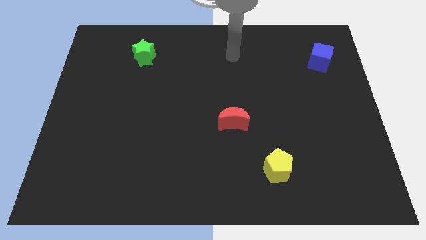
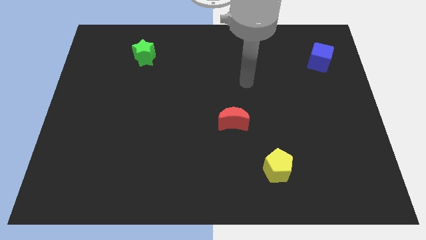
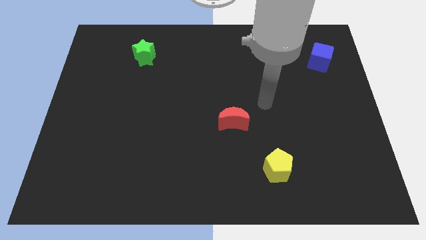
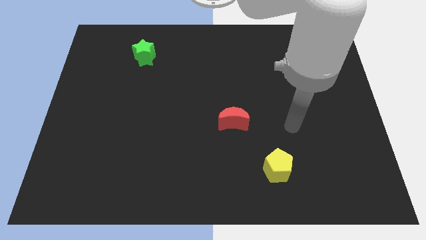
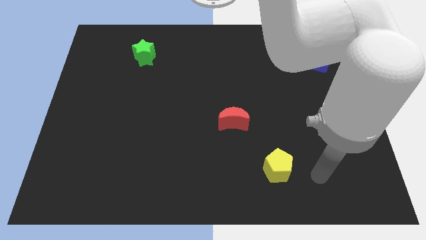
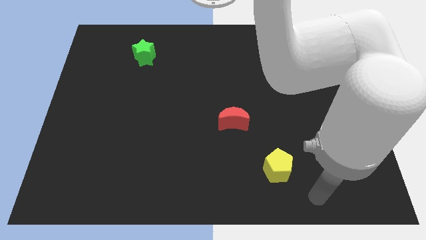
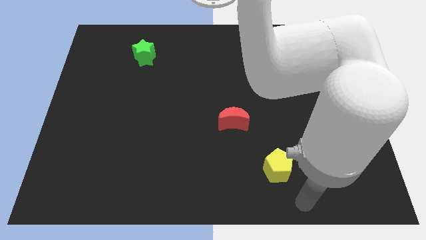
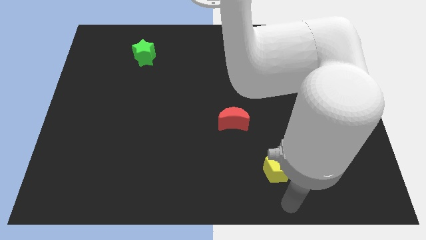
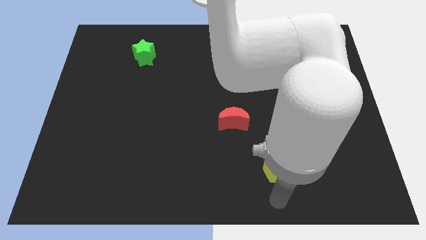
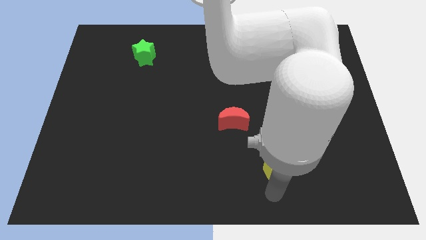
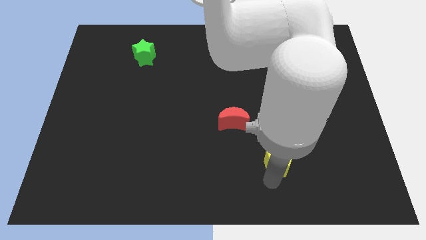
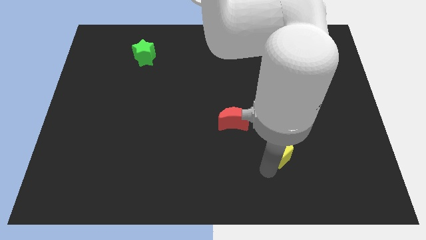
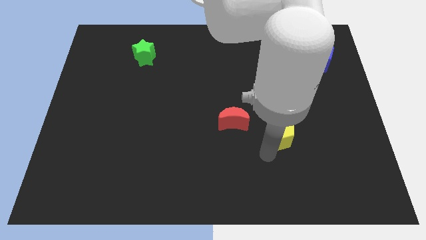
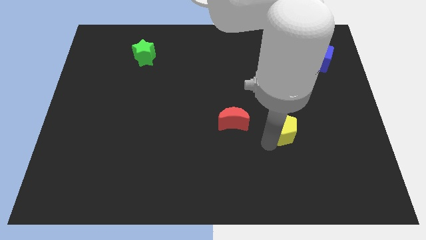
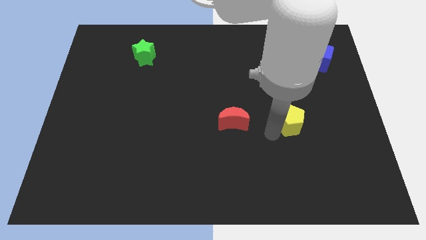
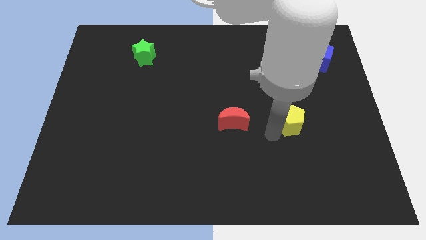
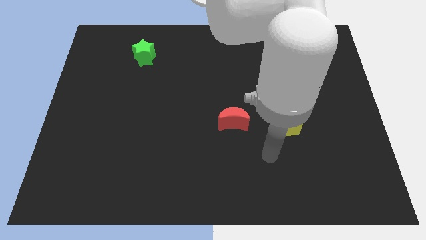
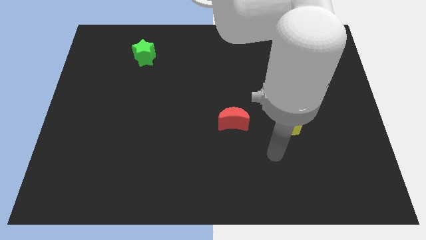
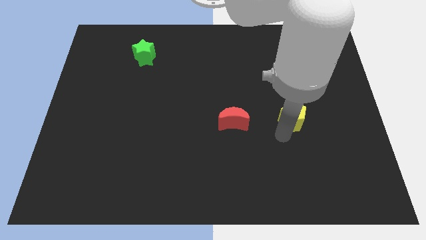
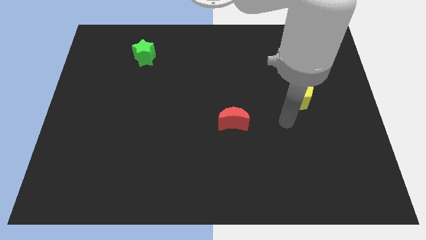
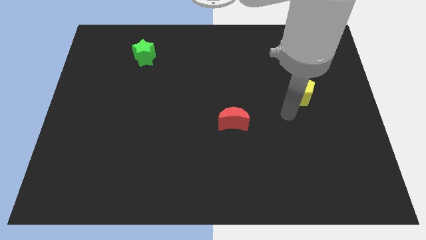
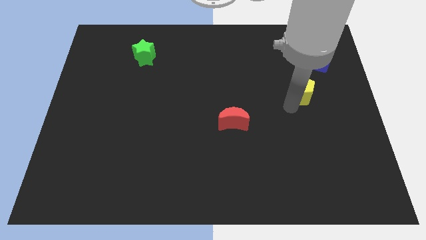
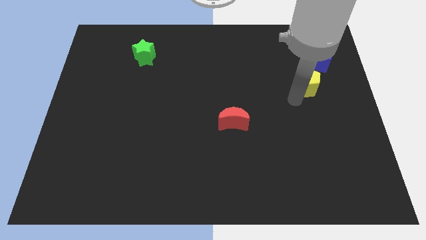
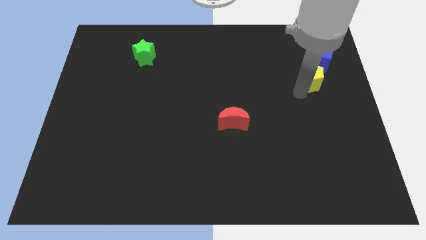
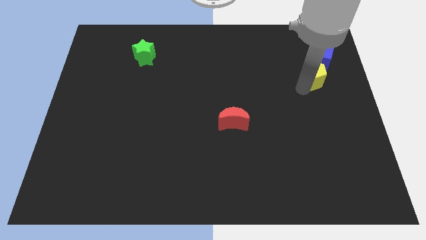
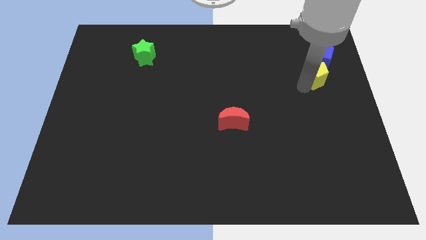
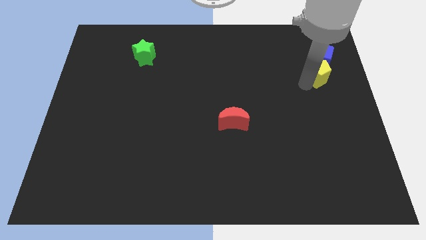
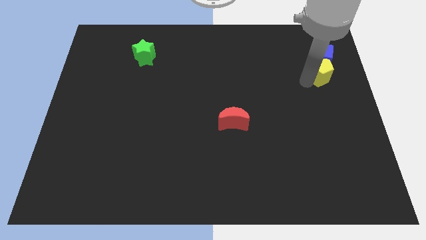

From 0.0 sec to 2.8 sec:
put the yellow block close to the cube

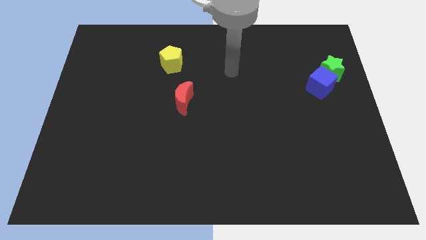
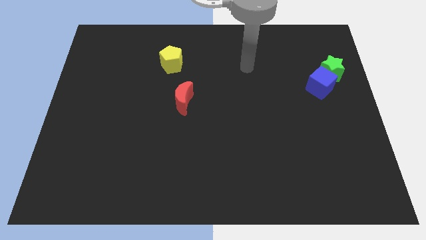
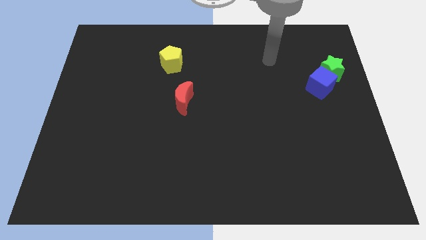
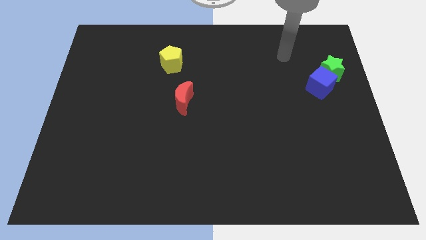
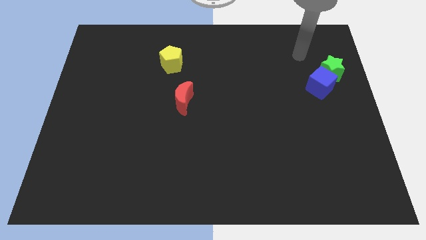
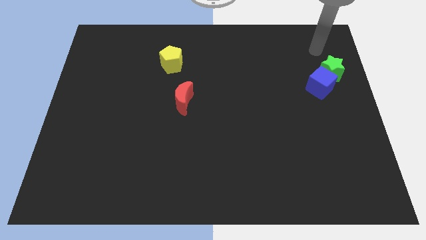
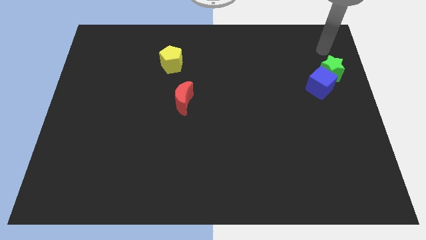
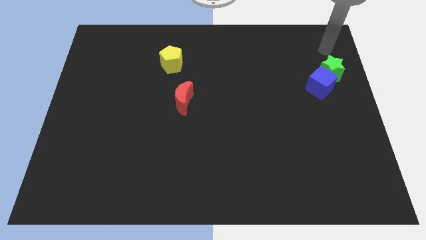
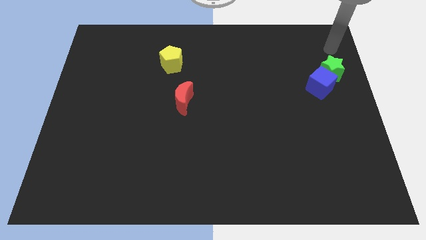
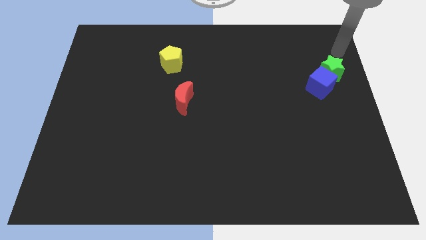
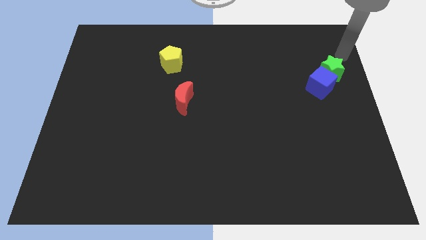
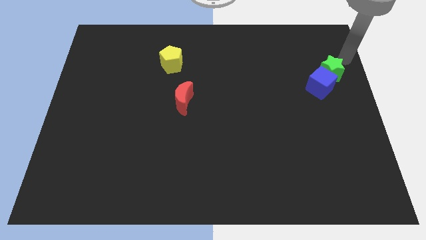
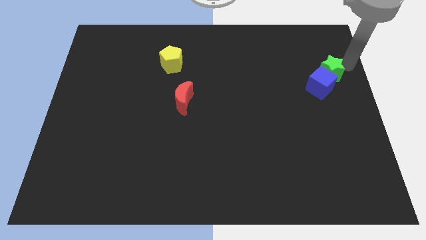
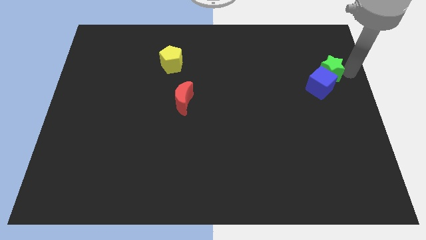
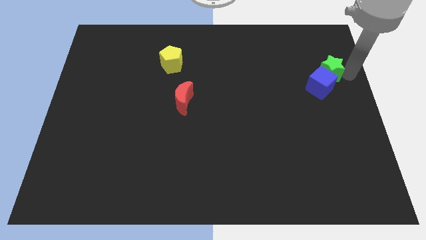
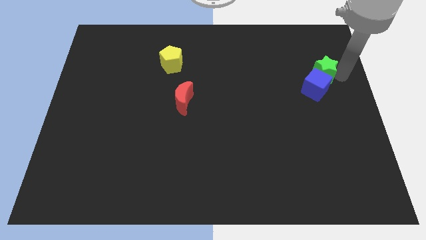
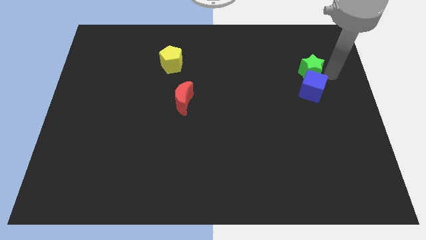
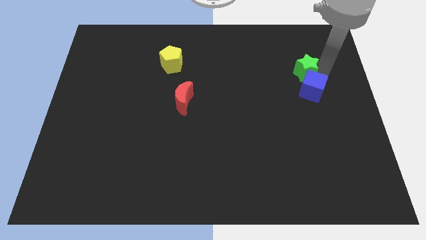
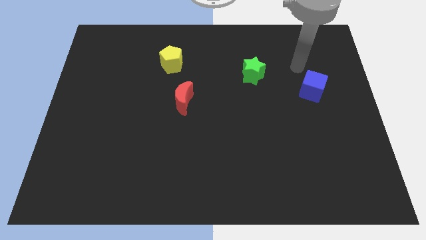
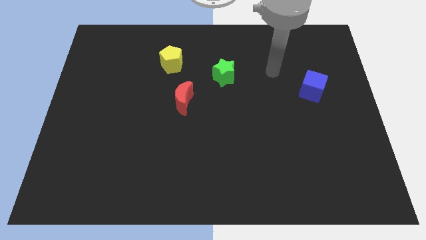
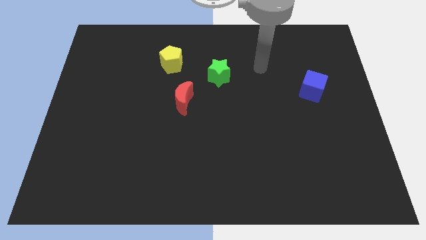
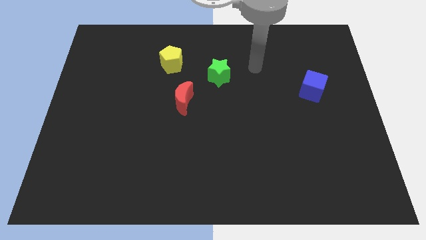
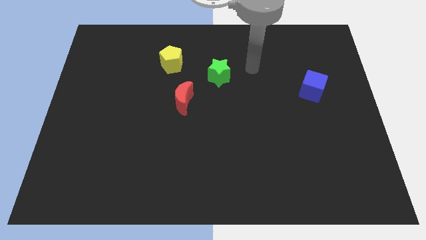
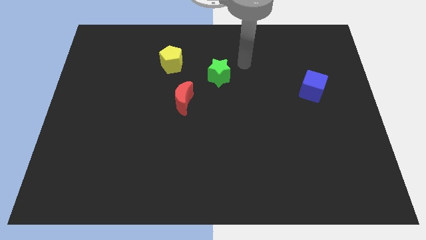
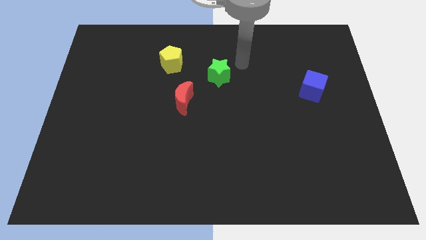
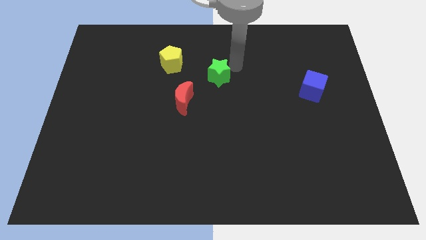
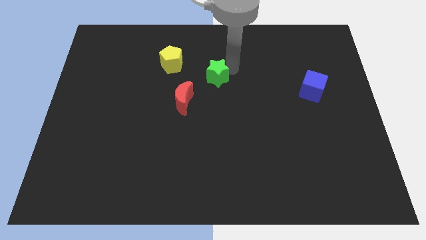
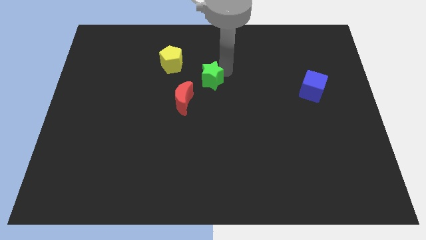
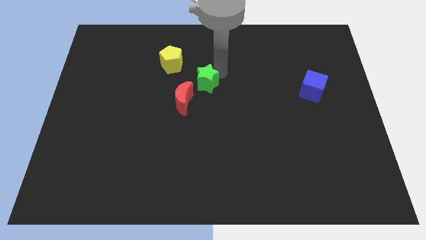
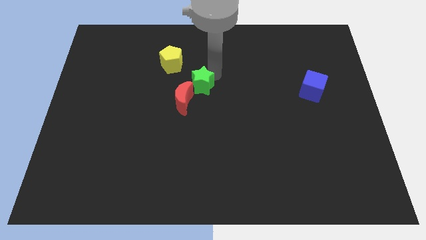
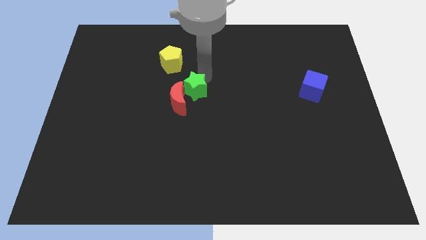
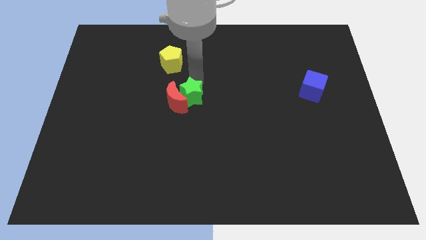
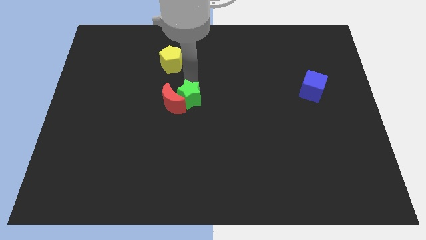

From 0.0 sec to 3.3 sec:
put the green star next to the red block

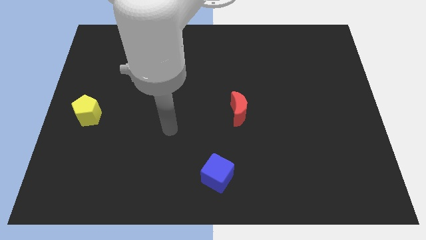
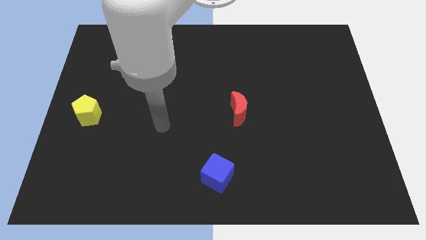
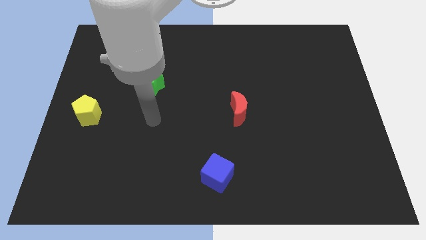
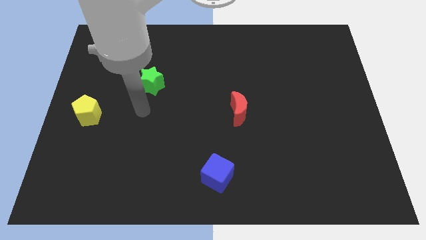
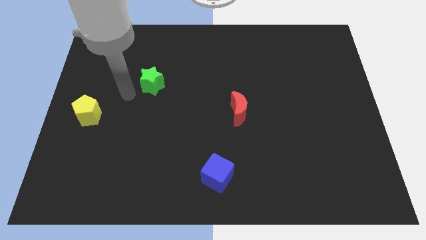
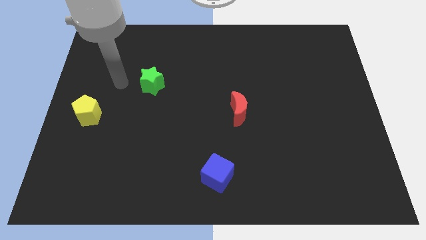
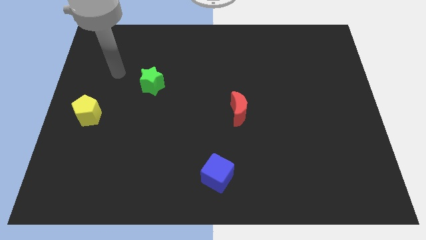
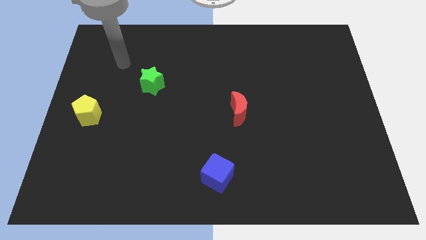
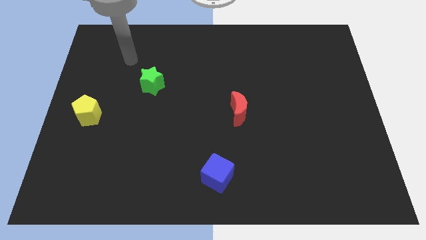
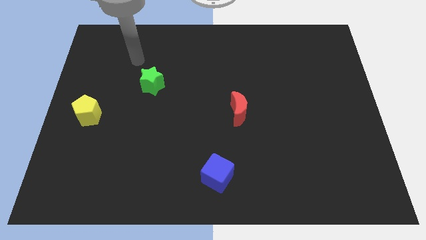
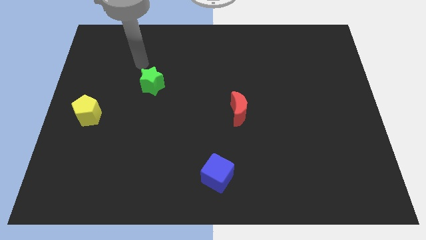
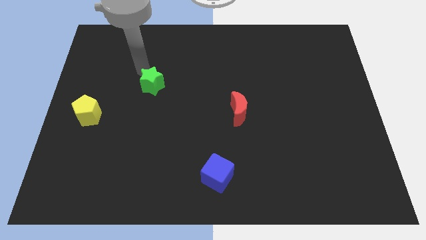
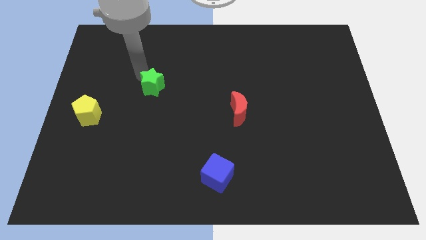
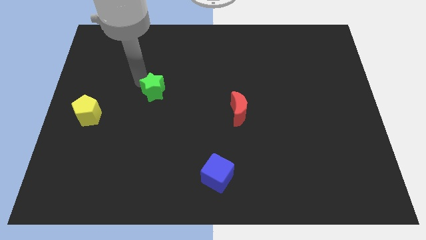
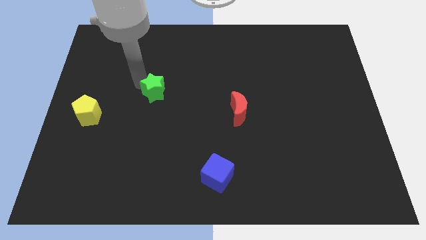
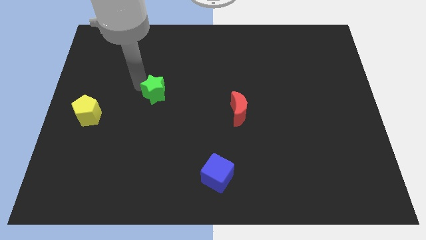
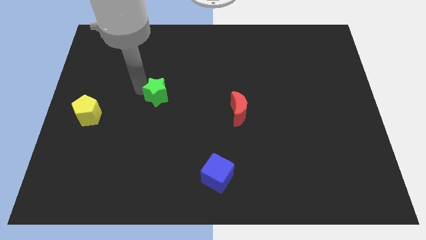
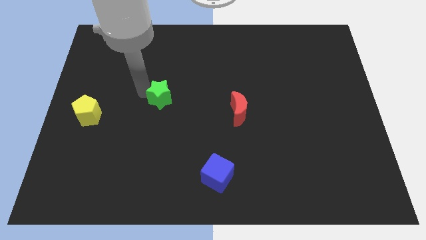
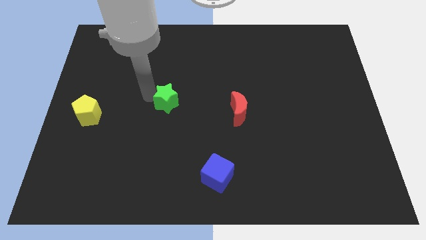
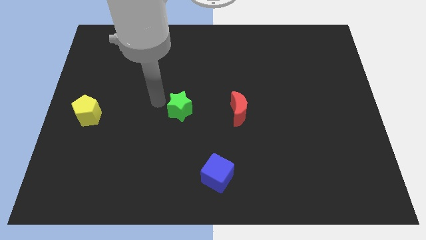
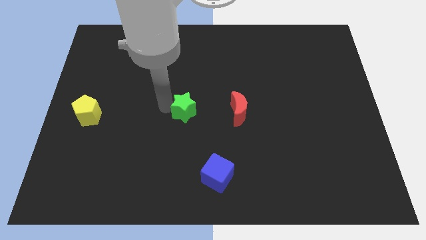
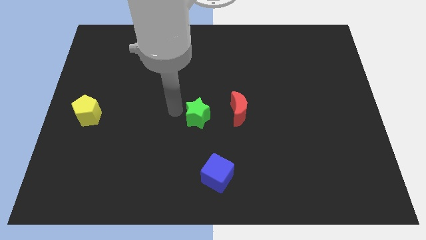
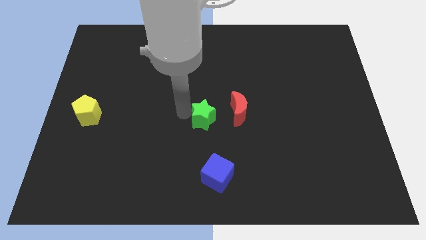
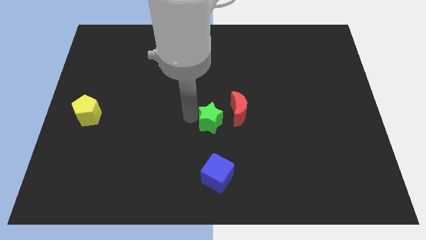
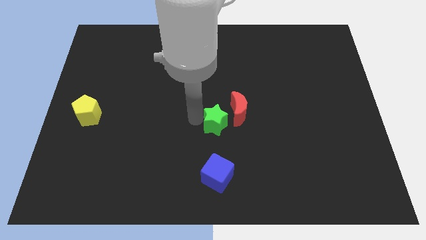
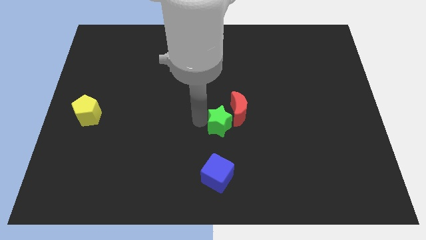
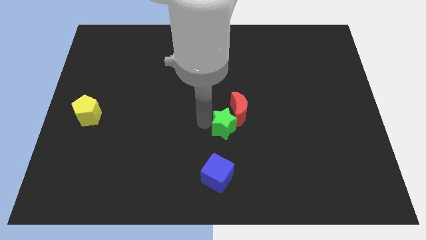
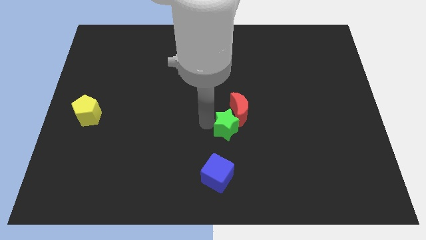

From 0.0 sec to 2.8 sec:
put the star close to the red block
